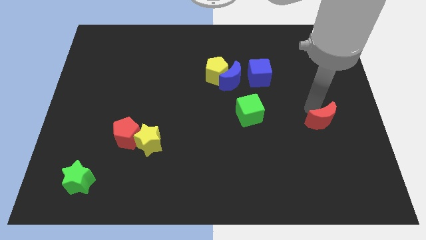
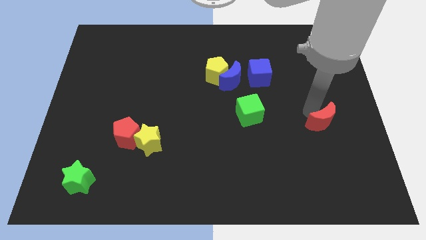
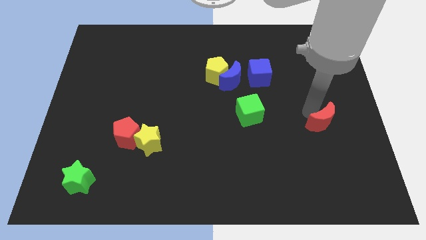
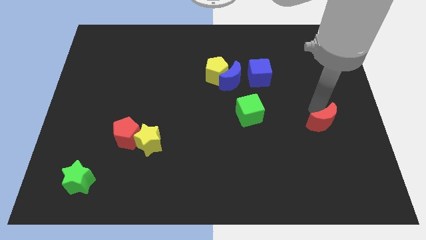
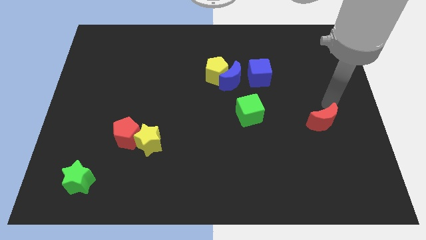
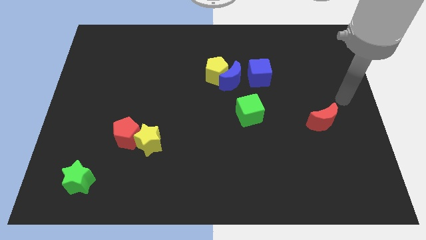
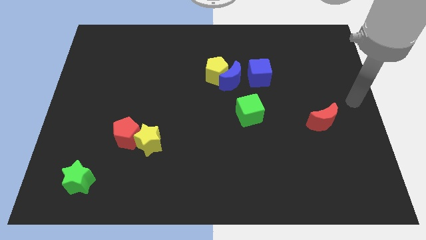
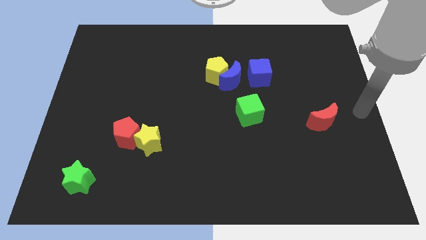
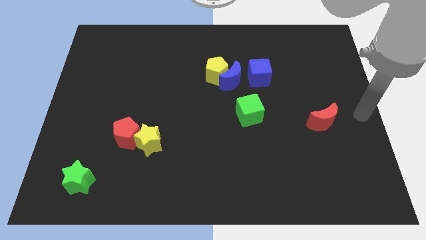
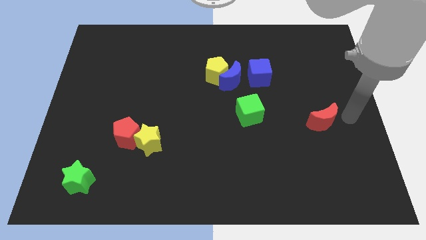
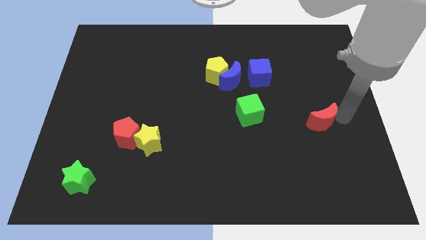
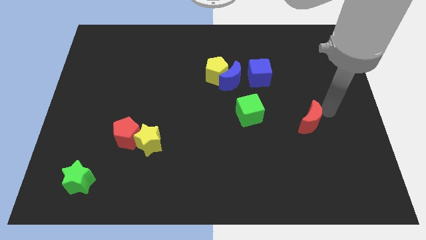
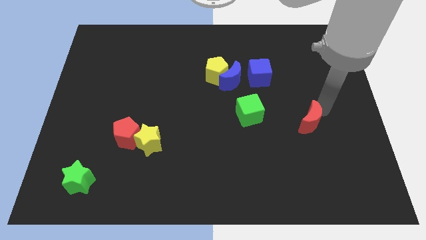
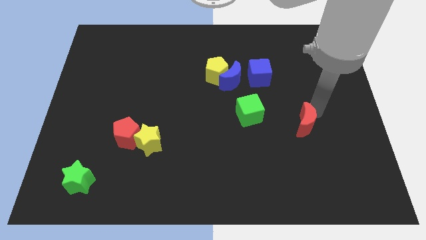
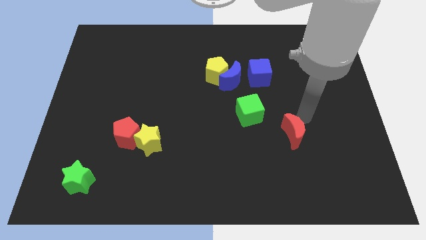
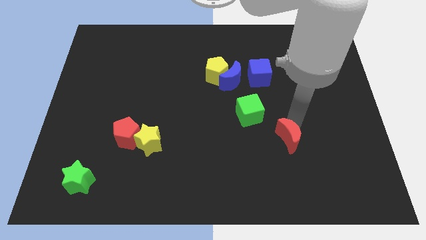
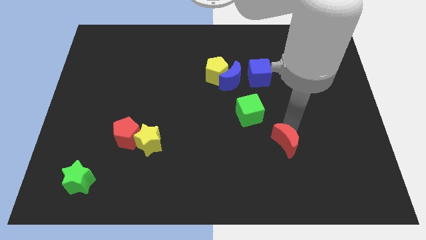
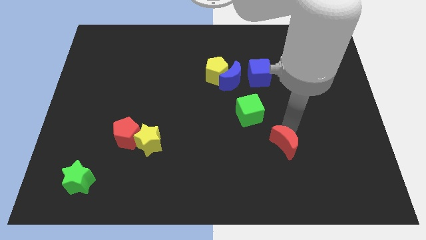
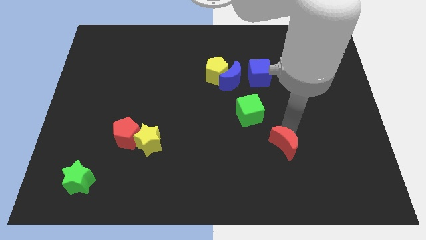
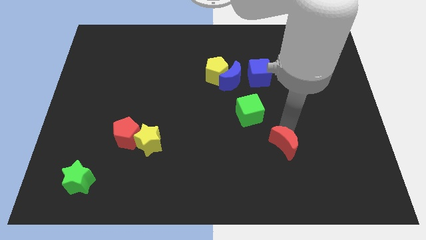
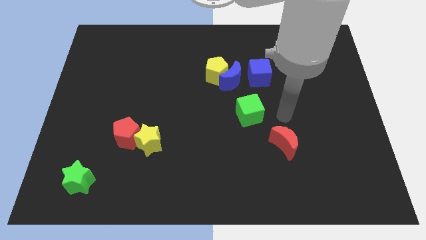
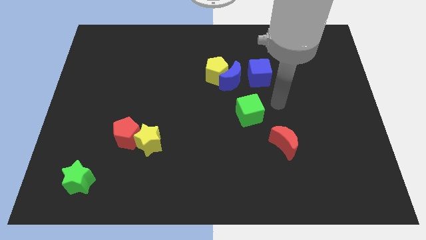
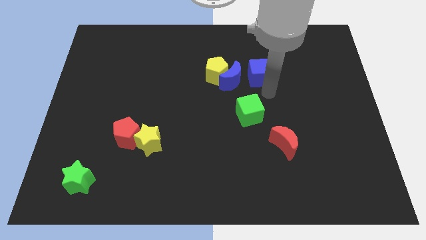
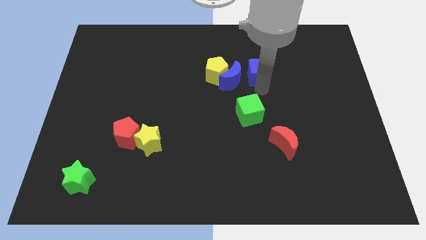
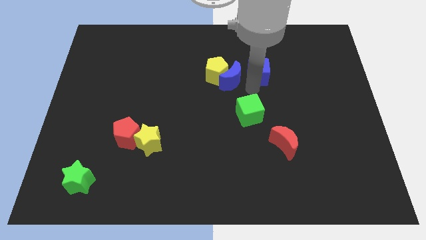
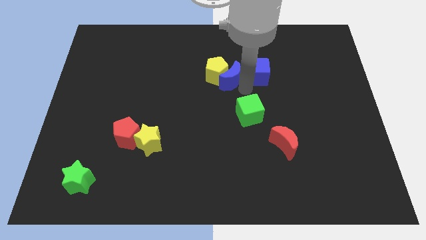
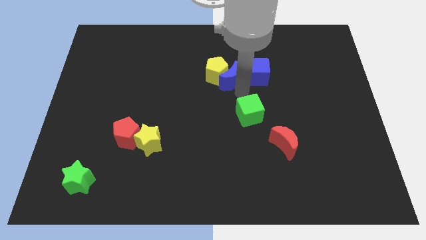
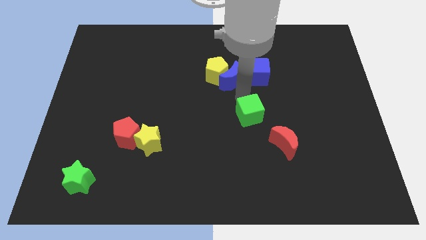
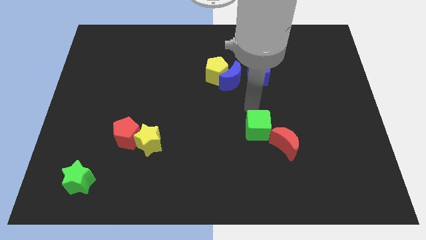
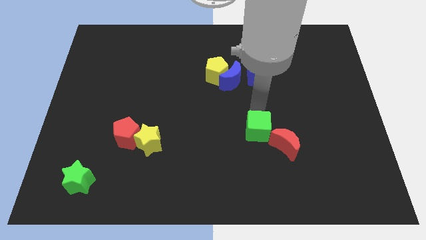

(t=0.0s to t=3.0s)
place green cube on left top of red crescent

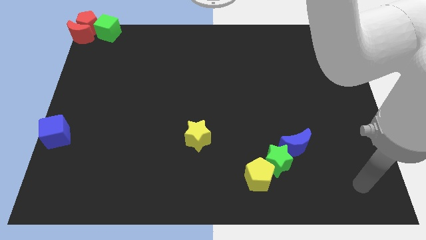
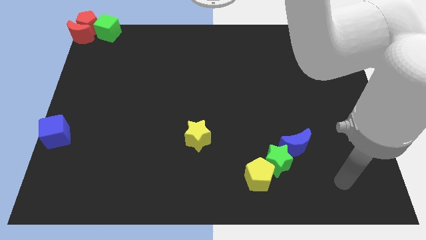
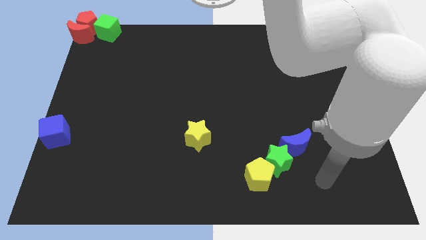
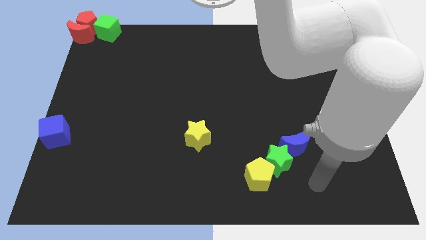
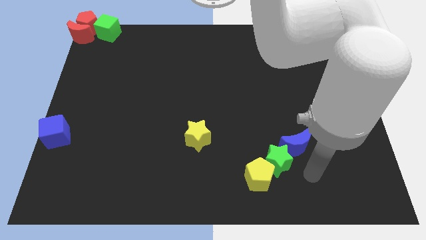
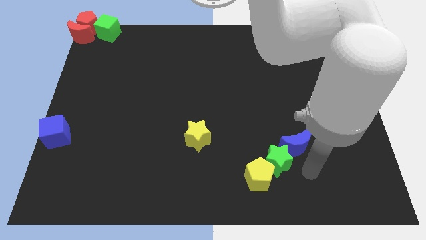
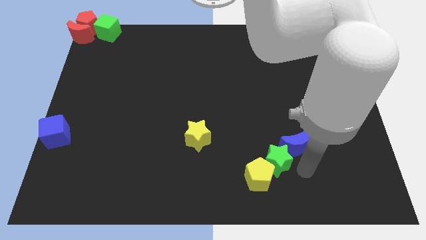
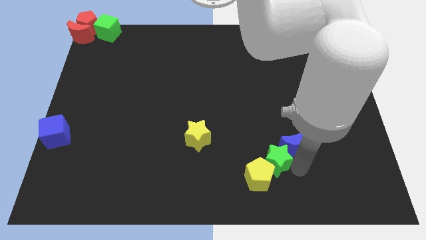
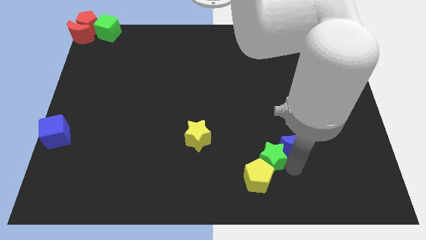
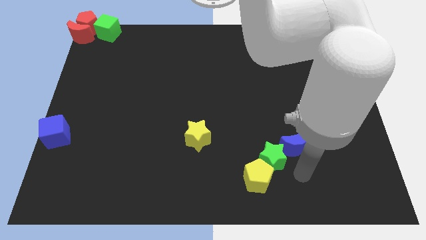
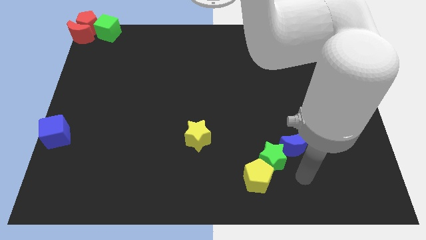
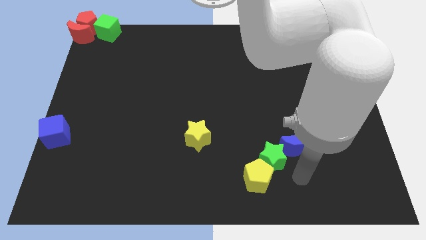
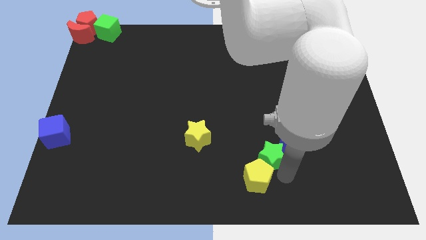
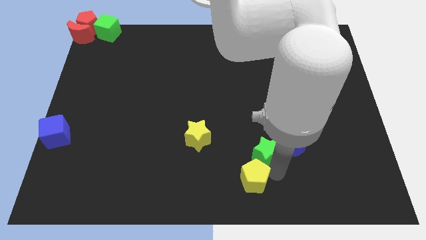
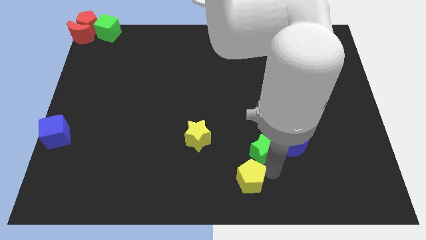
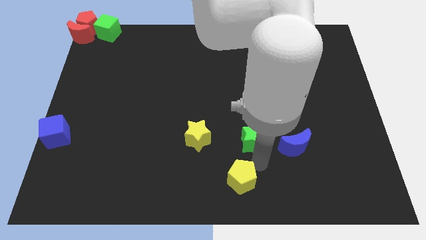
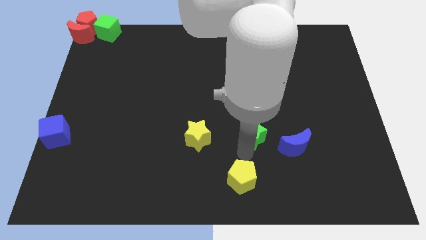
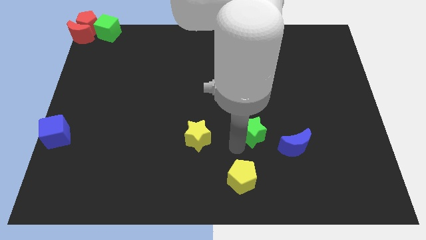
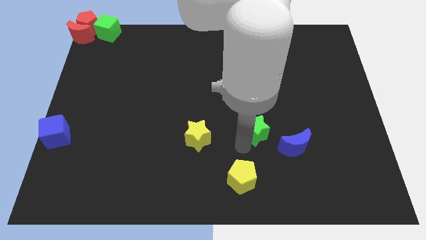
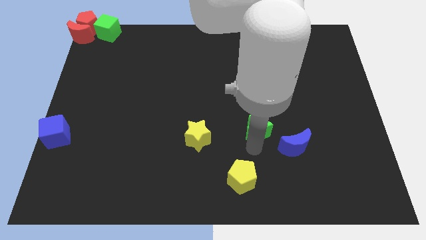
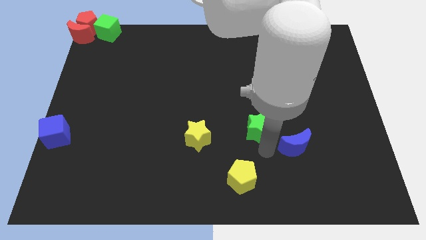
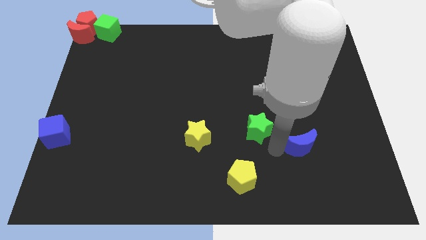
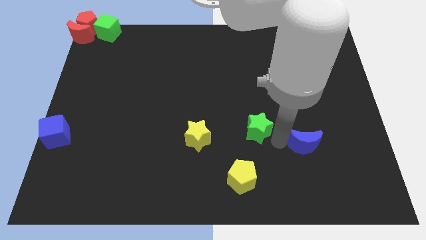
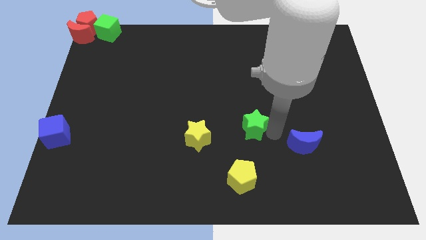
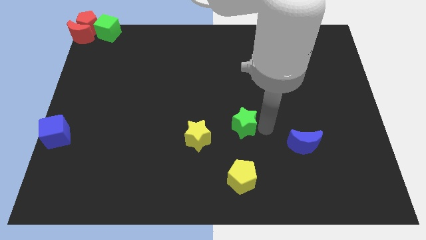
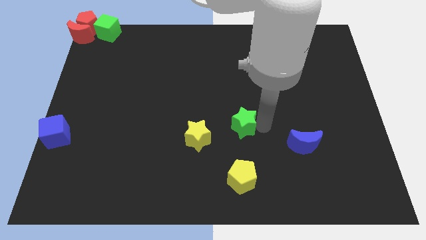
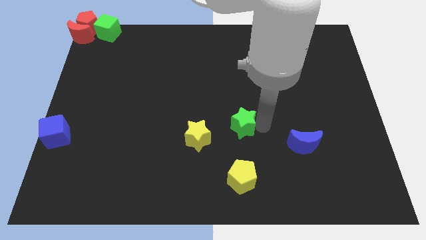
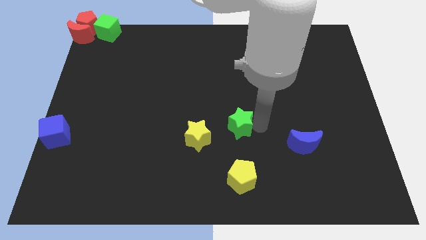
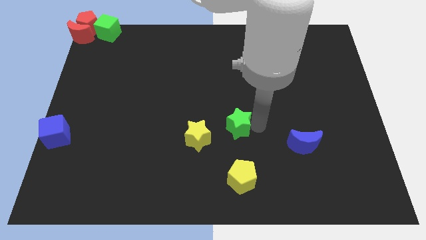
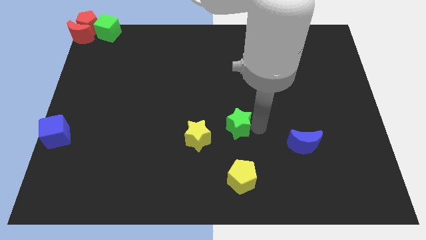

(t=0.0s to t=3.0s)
separate the green star from yellow pentagon and blue crescent

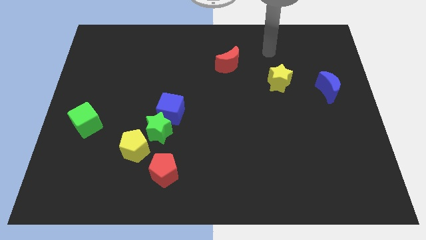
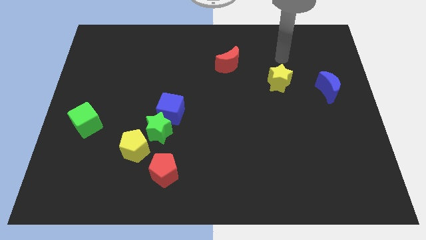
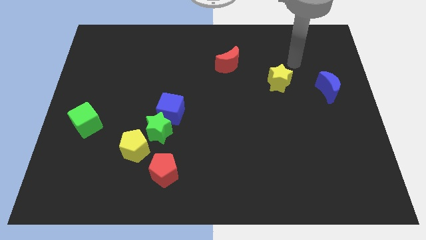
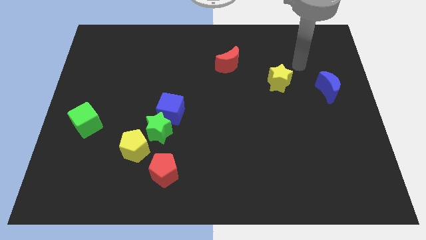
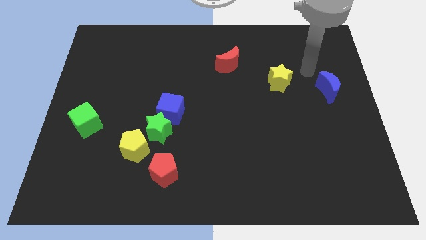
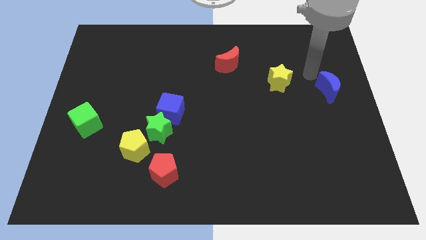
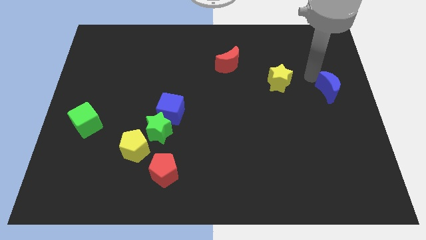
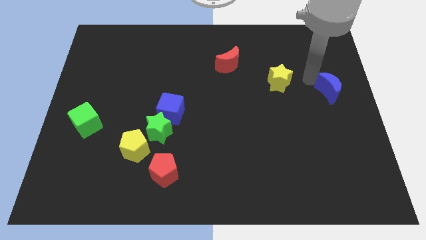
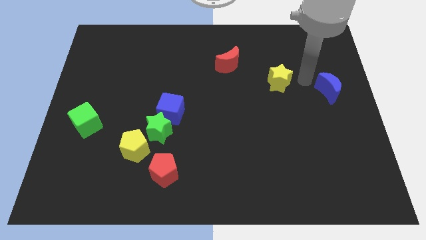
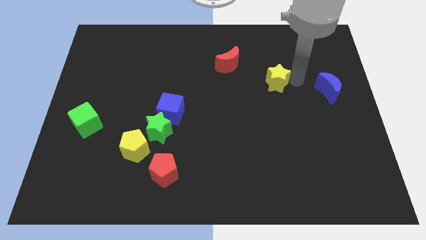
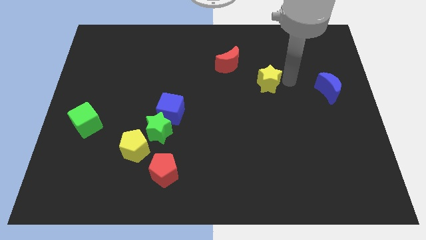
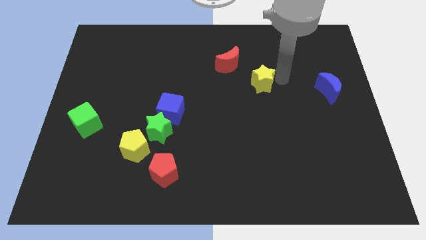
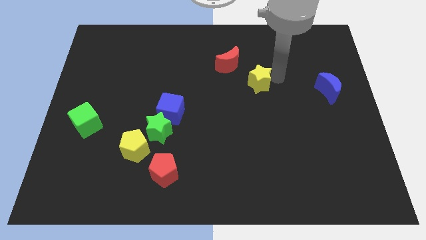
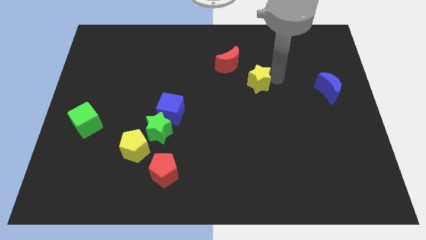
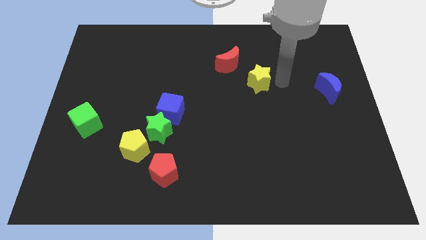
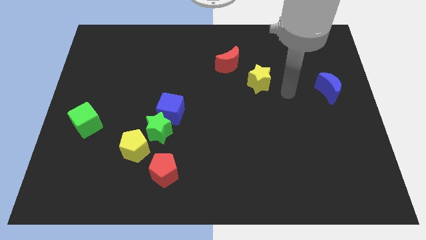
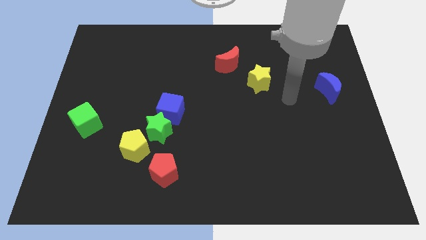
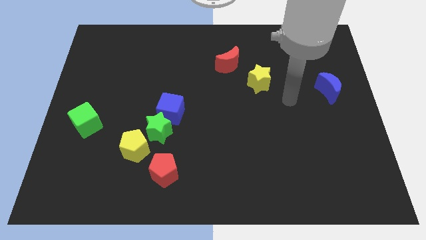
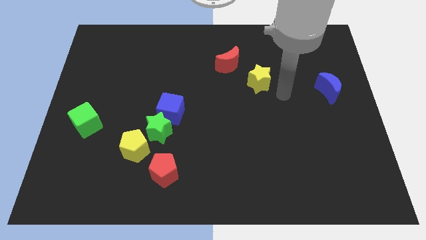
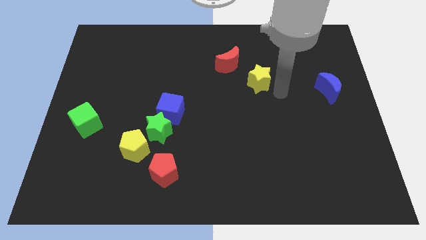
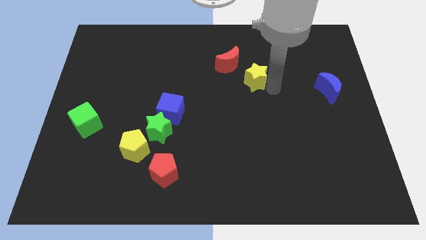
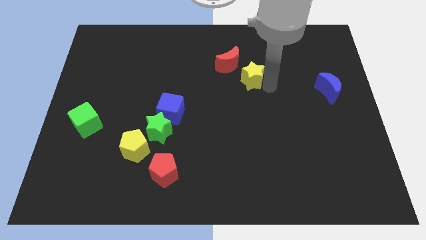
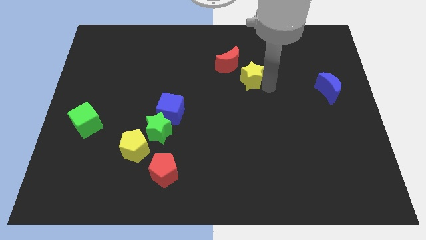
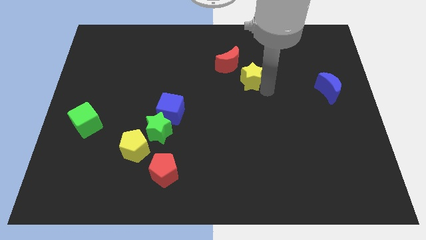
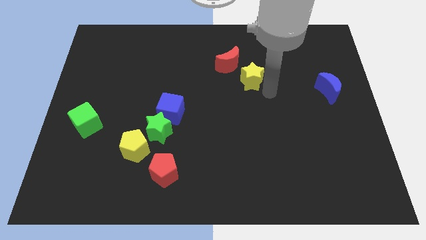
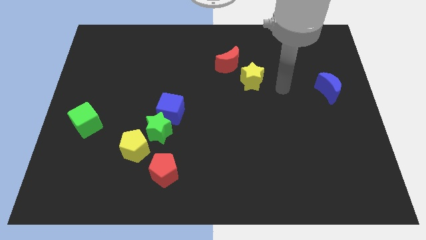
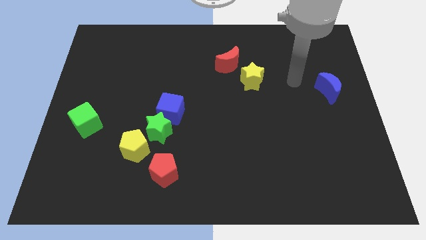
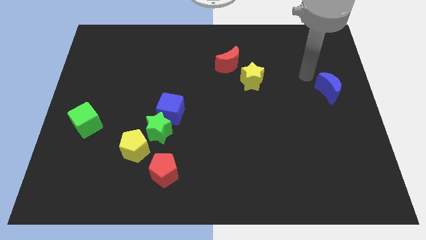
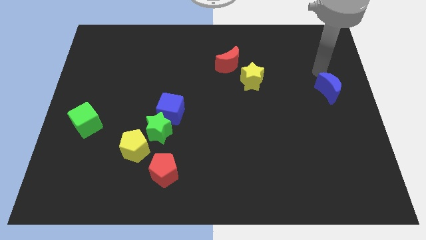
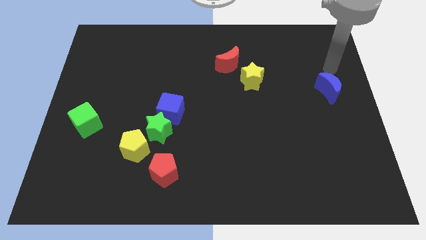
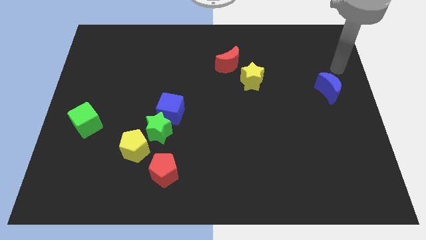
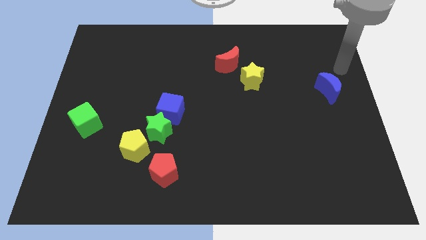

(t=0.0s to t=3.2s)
move yellow star near red crescent
